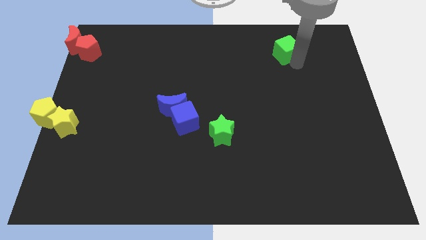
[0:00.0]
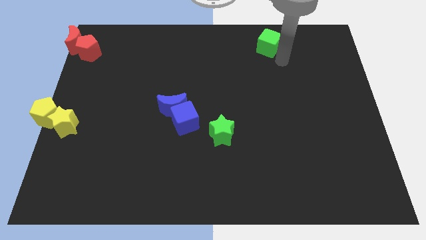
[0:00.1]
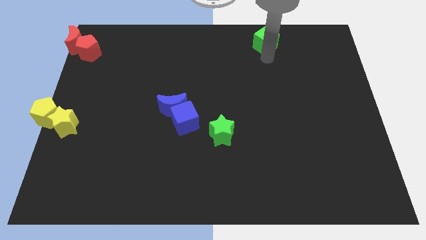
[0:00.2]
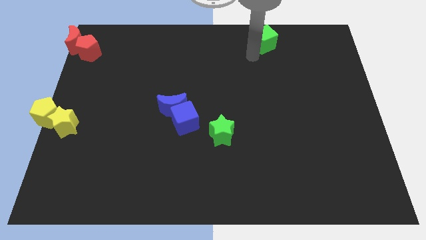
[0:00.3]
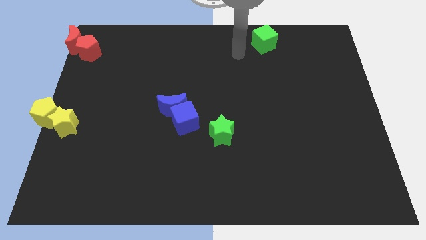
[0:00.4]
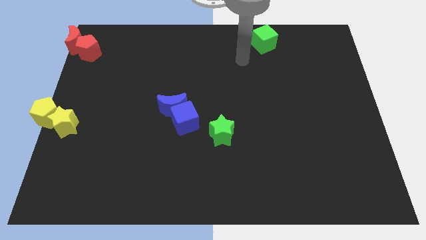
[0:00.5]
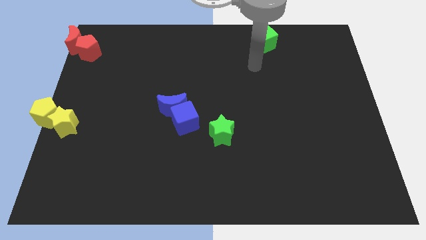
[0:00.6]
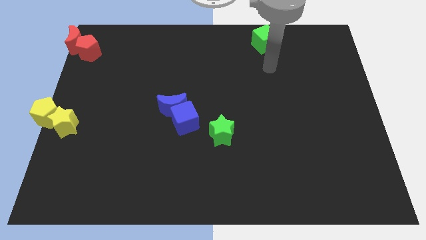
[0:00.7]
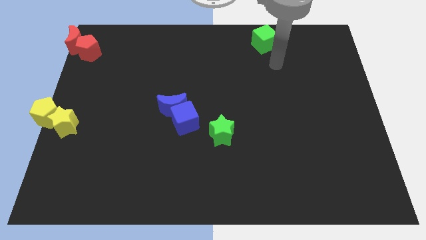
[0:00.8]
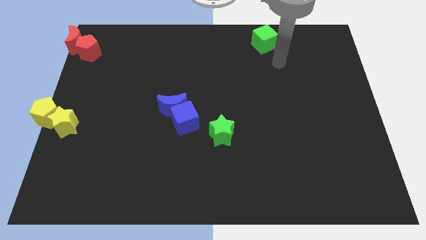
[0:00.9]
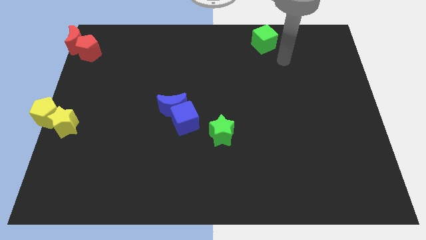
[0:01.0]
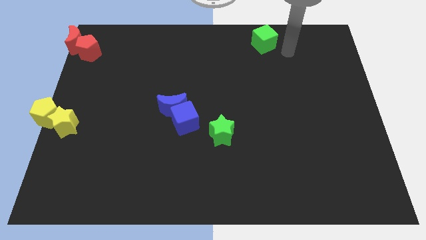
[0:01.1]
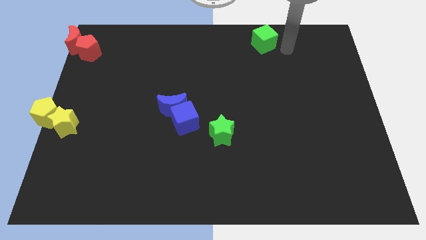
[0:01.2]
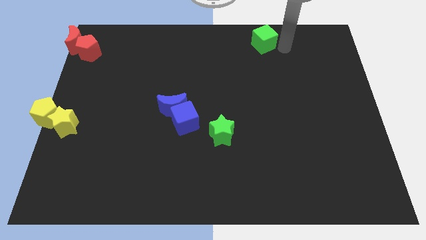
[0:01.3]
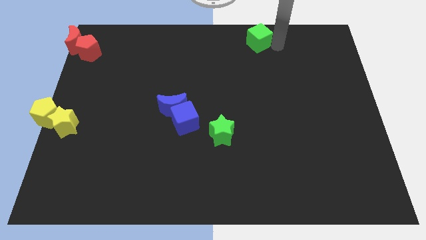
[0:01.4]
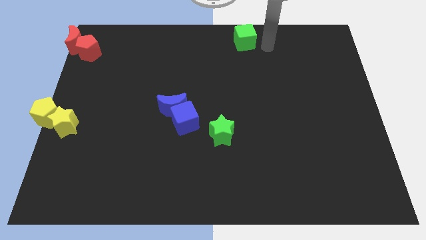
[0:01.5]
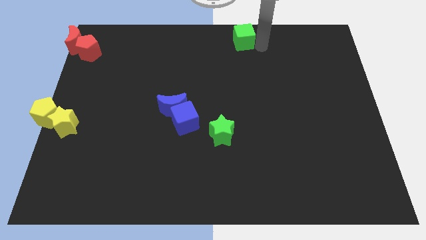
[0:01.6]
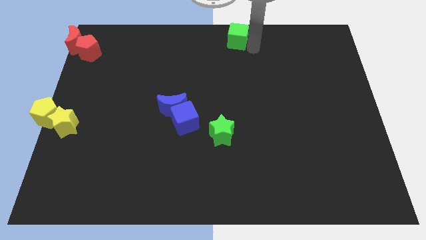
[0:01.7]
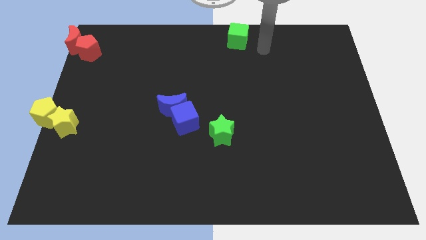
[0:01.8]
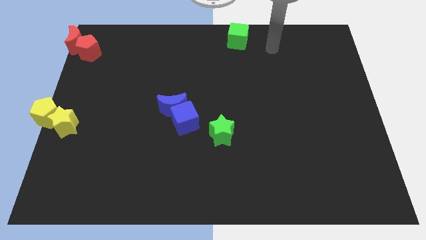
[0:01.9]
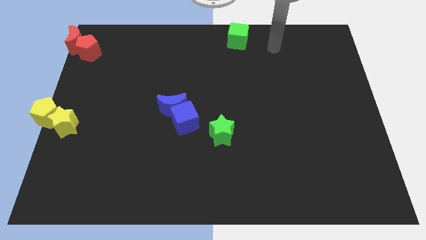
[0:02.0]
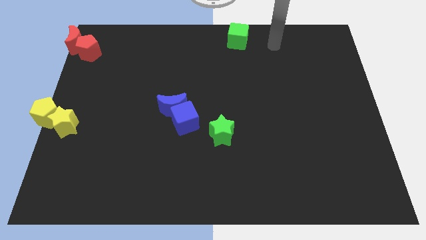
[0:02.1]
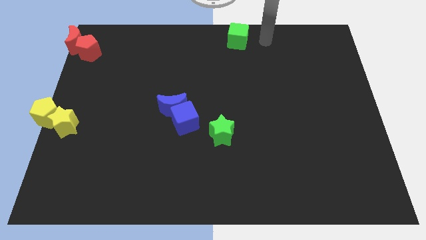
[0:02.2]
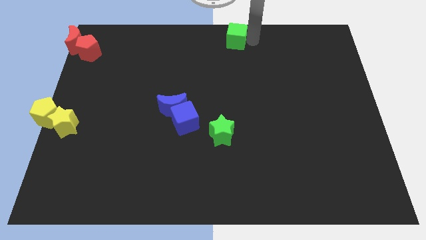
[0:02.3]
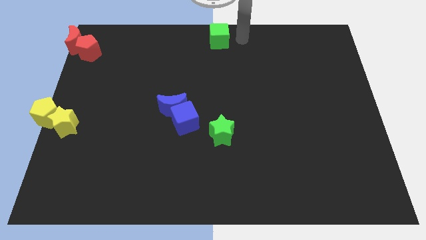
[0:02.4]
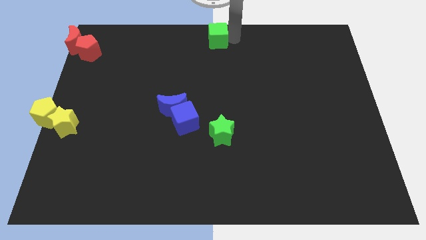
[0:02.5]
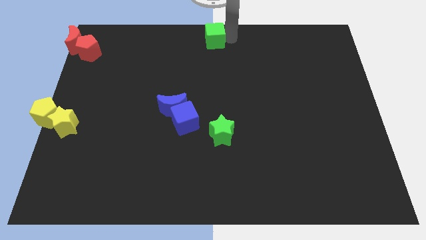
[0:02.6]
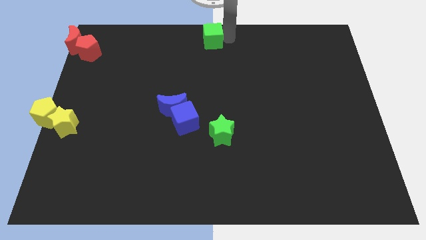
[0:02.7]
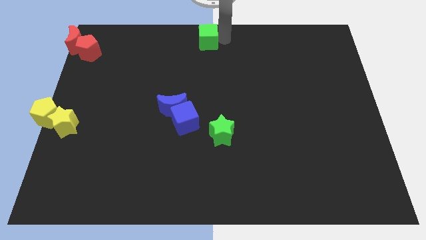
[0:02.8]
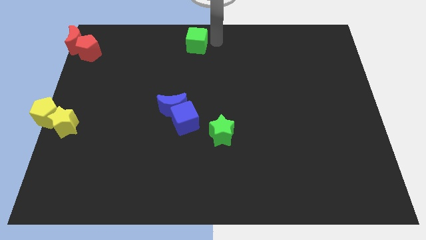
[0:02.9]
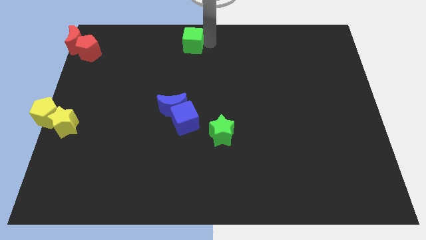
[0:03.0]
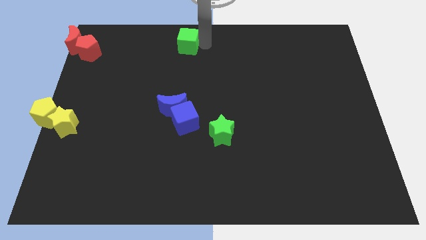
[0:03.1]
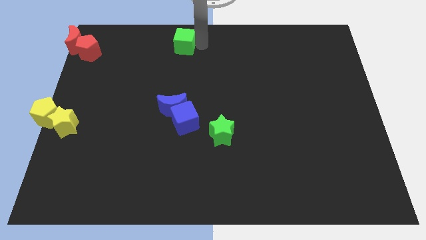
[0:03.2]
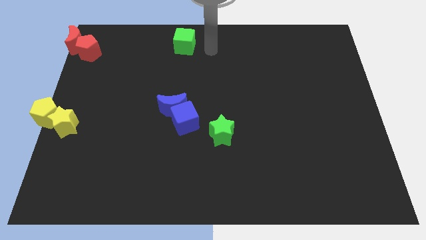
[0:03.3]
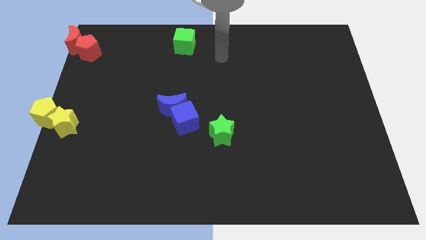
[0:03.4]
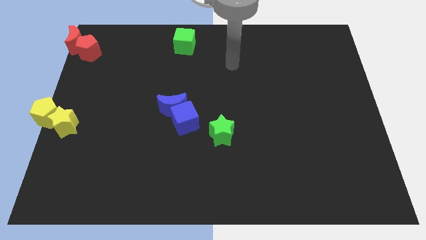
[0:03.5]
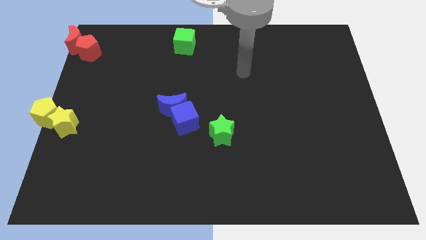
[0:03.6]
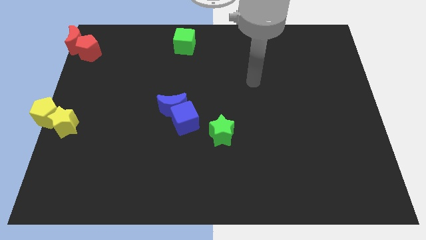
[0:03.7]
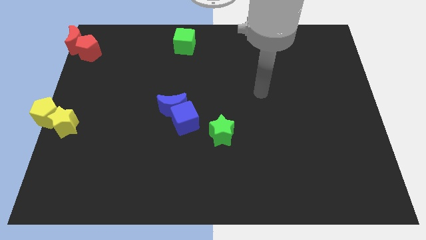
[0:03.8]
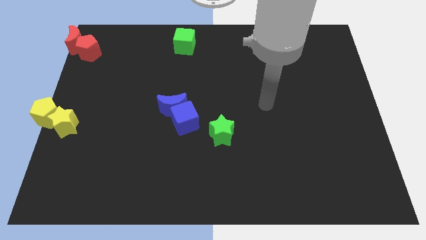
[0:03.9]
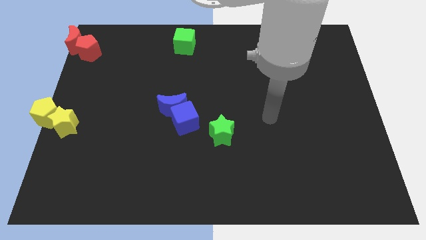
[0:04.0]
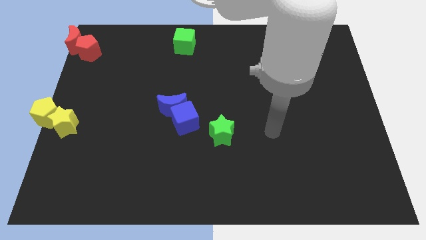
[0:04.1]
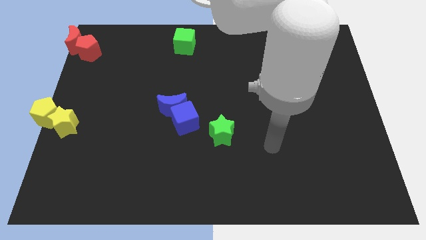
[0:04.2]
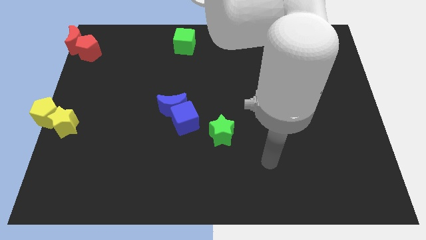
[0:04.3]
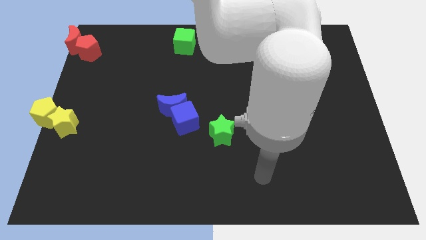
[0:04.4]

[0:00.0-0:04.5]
move the green cube vertically to the top side of the blue moon

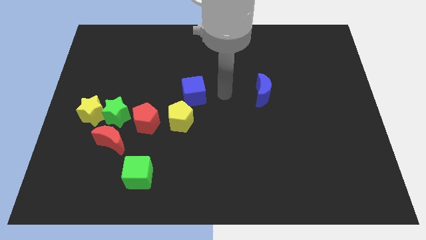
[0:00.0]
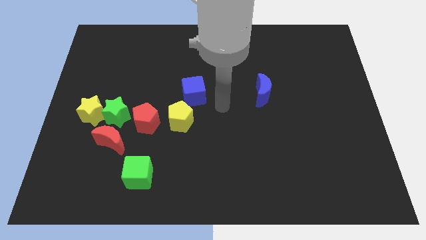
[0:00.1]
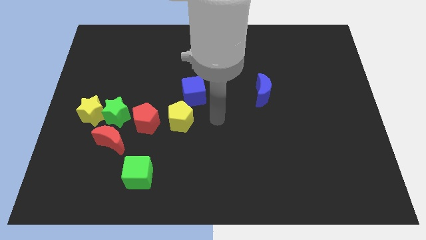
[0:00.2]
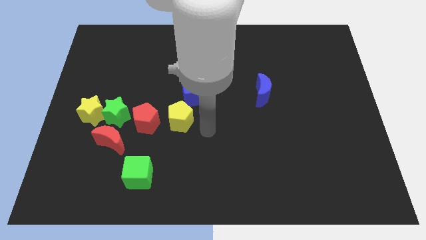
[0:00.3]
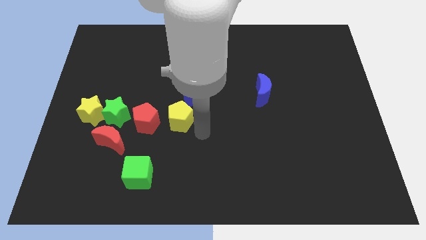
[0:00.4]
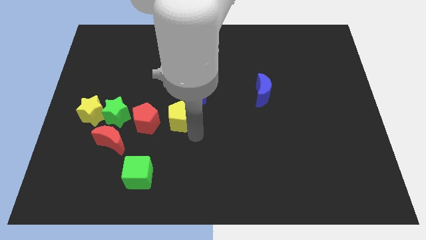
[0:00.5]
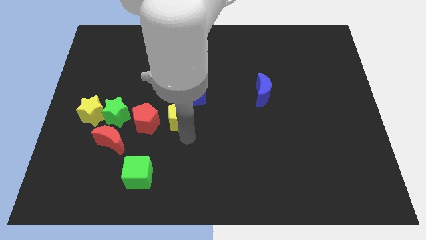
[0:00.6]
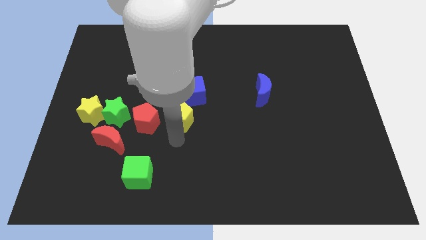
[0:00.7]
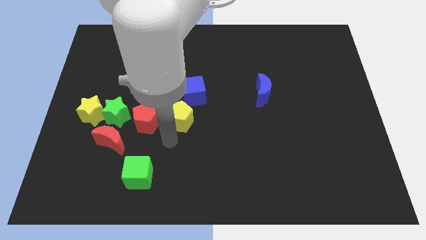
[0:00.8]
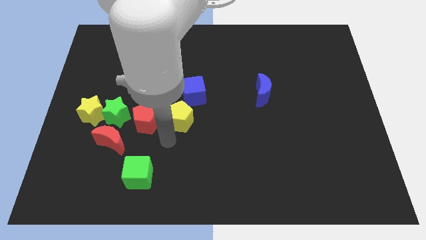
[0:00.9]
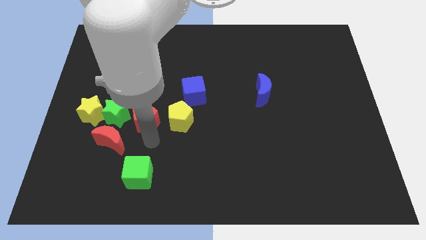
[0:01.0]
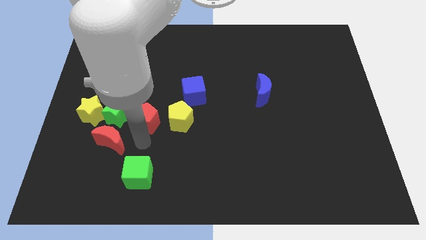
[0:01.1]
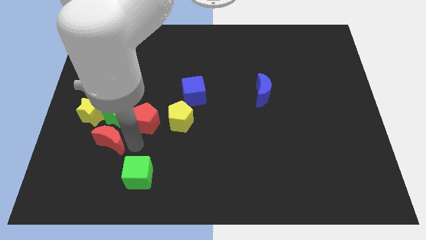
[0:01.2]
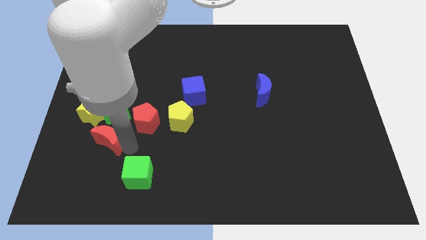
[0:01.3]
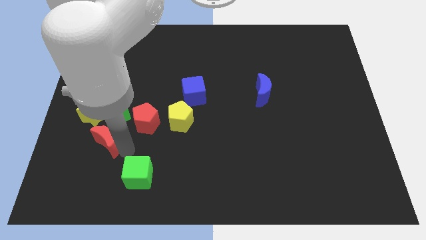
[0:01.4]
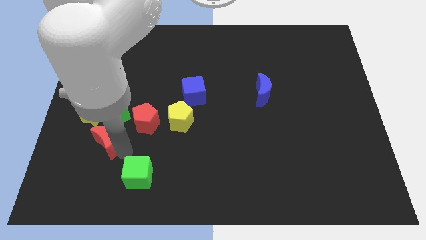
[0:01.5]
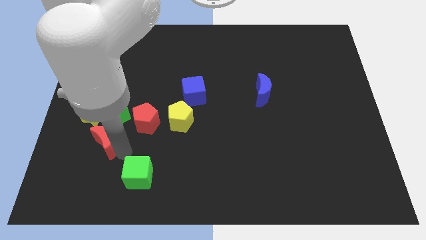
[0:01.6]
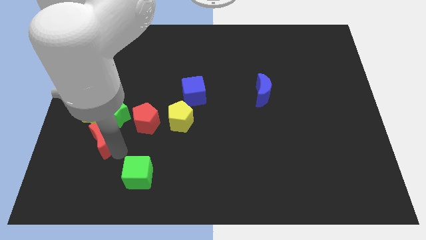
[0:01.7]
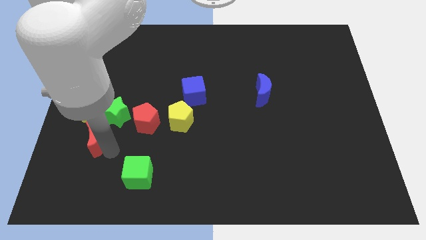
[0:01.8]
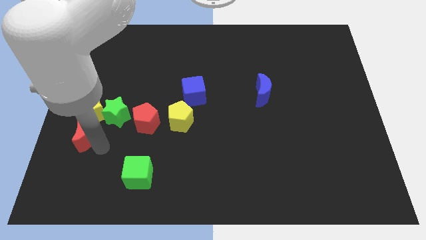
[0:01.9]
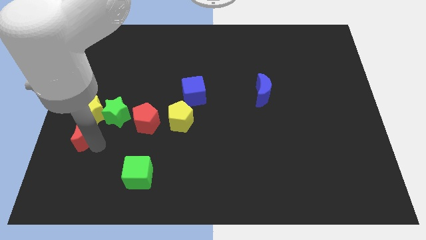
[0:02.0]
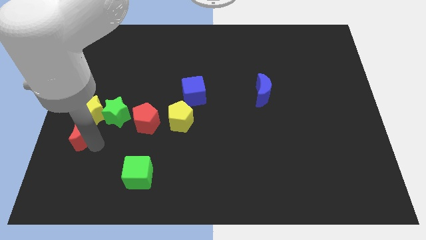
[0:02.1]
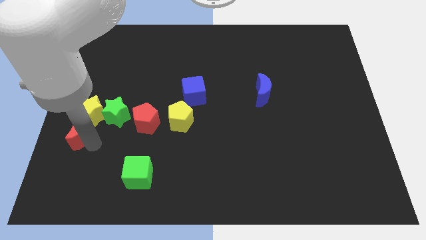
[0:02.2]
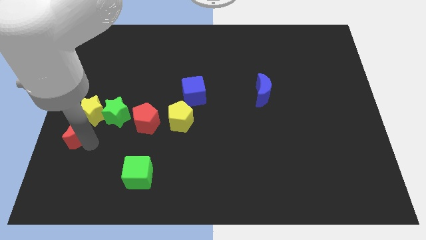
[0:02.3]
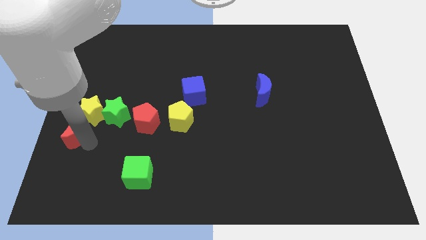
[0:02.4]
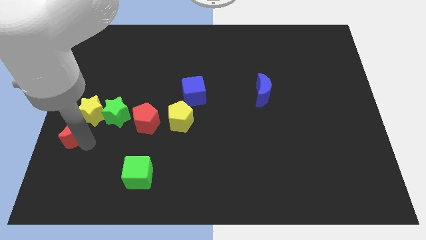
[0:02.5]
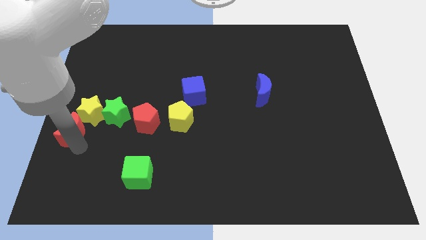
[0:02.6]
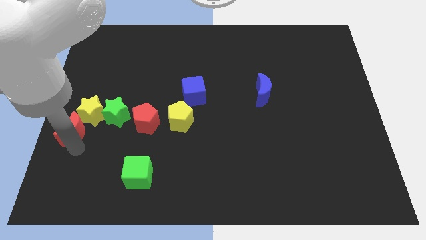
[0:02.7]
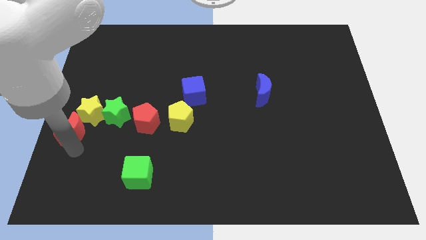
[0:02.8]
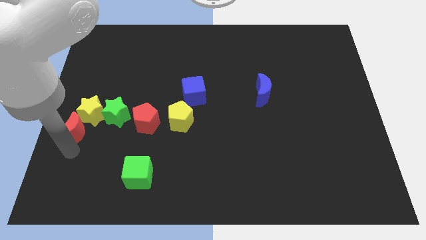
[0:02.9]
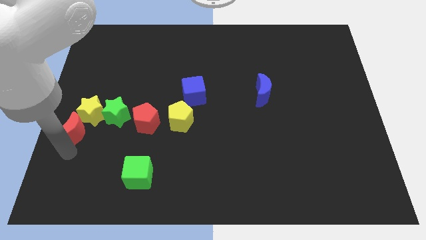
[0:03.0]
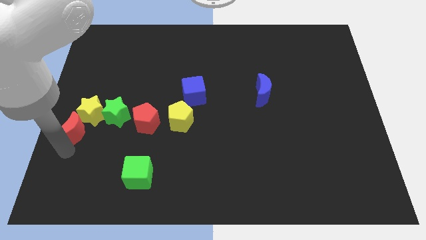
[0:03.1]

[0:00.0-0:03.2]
move the the red crescent into the yellow star

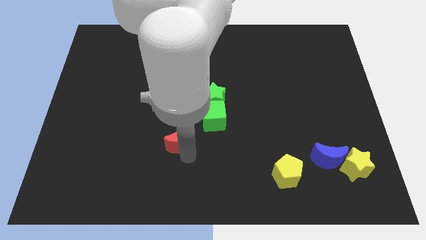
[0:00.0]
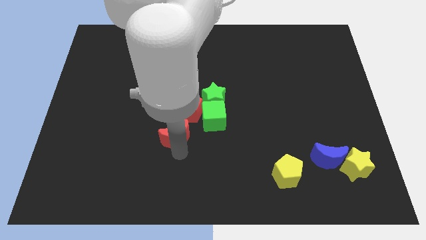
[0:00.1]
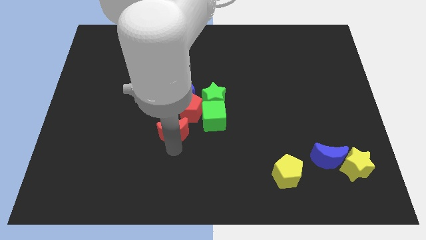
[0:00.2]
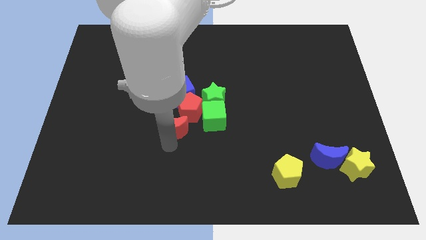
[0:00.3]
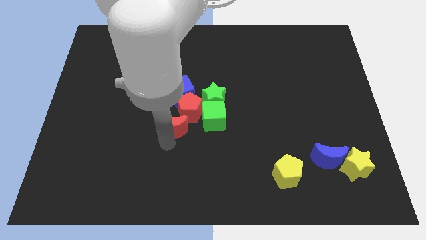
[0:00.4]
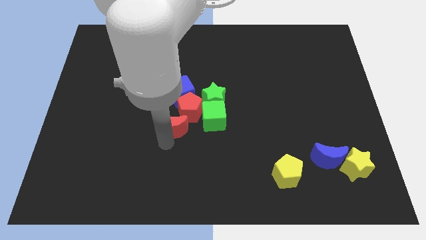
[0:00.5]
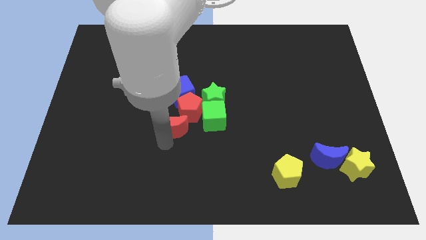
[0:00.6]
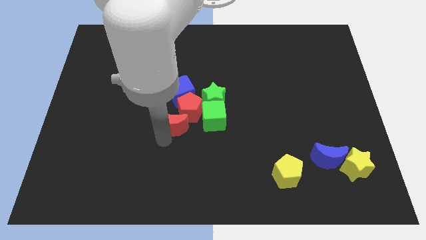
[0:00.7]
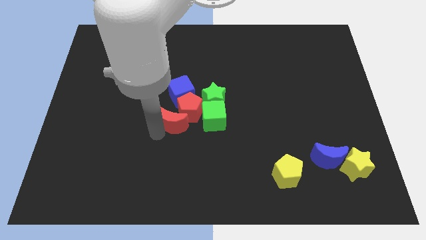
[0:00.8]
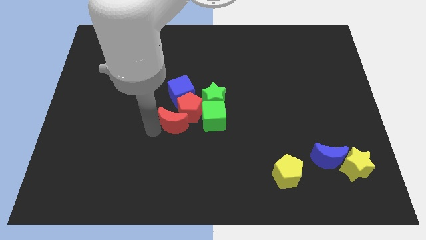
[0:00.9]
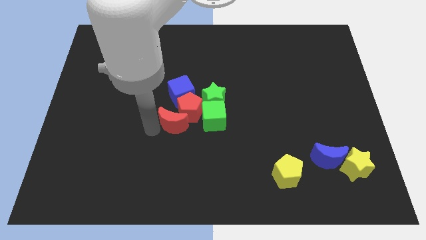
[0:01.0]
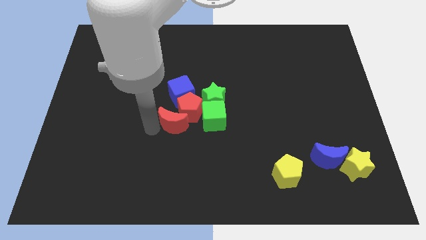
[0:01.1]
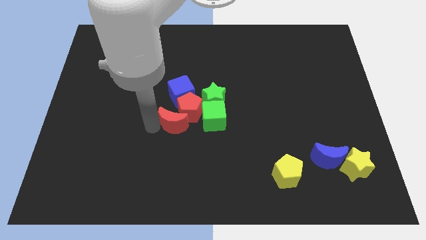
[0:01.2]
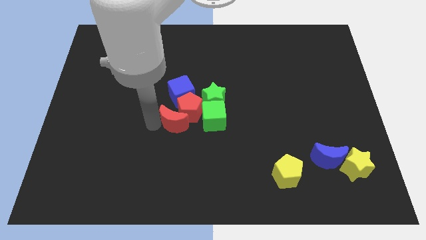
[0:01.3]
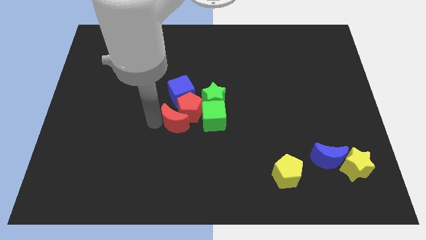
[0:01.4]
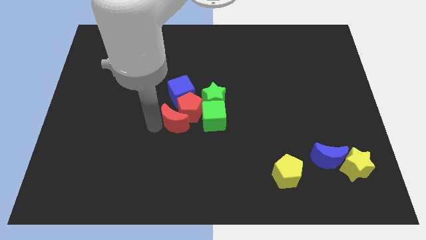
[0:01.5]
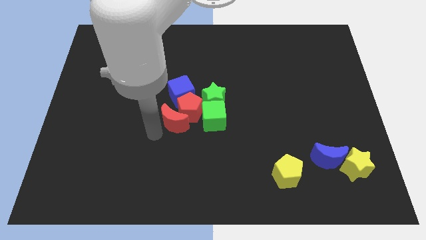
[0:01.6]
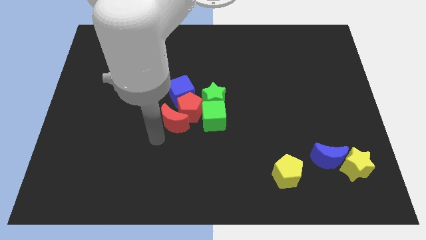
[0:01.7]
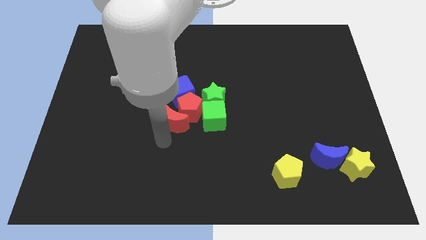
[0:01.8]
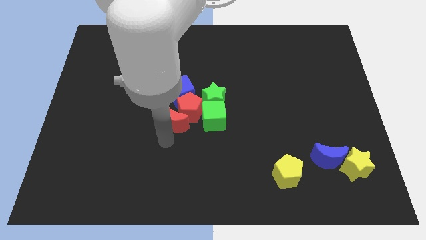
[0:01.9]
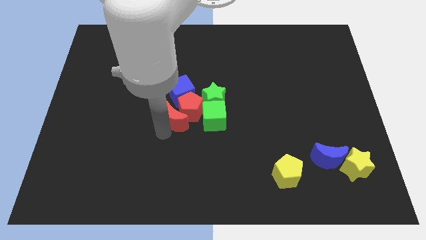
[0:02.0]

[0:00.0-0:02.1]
place the red crescent beside the red pentagon
